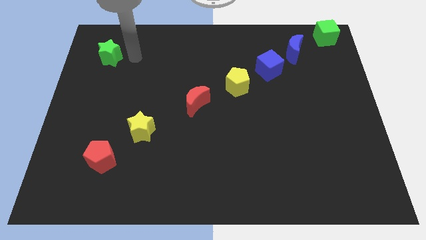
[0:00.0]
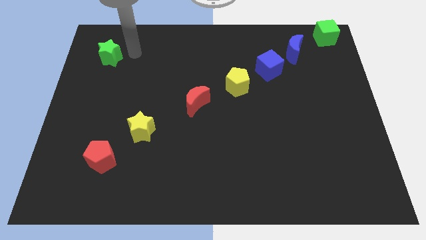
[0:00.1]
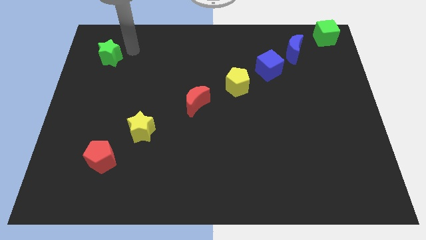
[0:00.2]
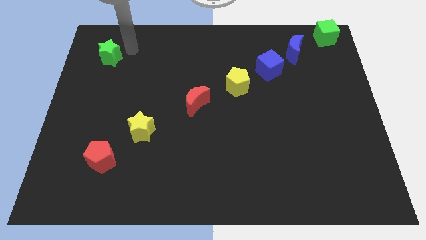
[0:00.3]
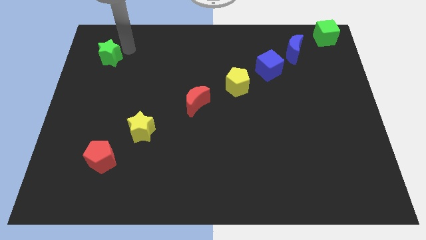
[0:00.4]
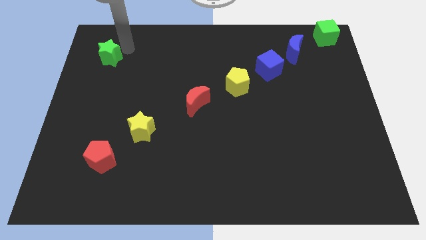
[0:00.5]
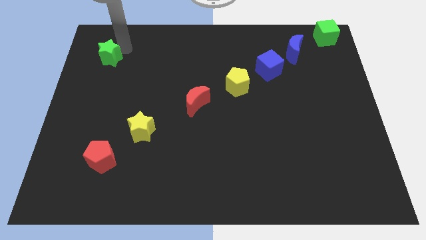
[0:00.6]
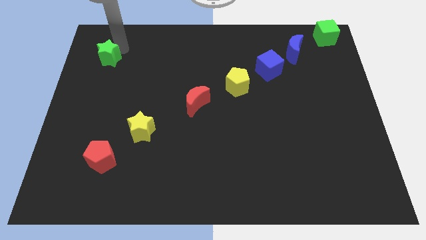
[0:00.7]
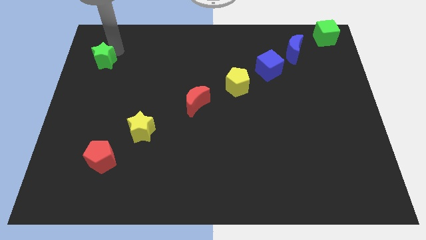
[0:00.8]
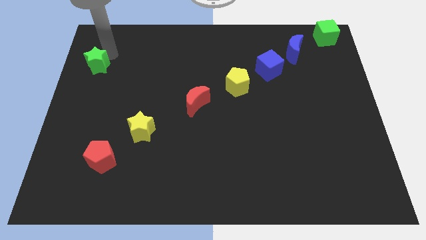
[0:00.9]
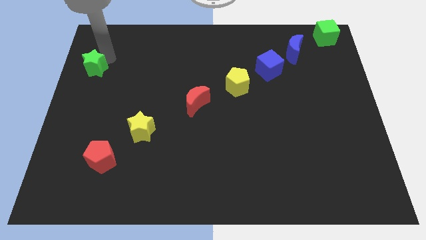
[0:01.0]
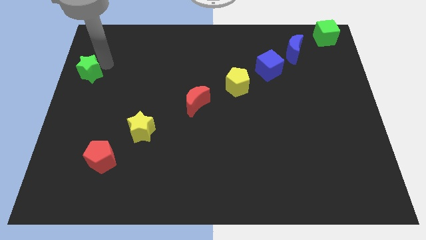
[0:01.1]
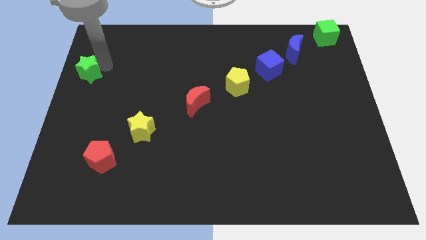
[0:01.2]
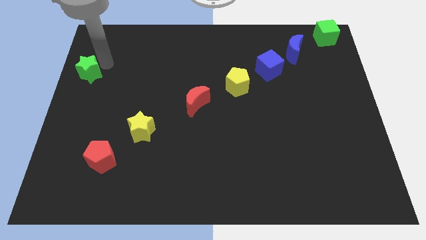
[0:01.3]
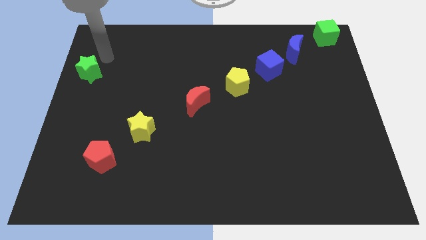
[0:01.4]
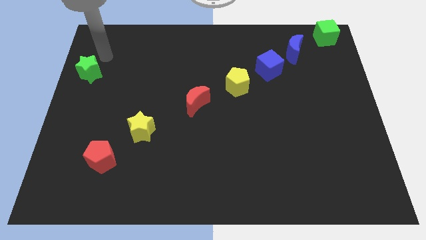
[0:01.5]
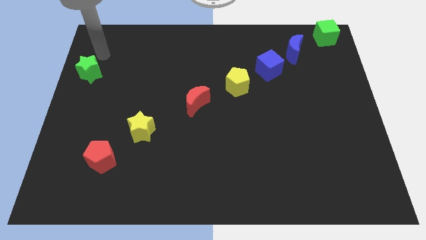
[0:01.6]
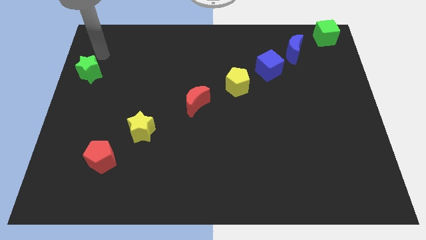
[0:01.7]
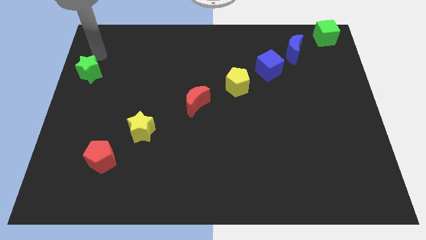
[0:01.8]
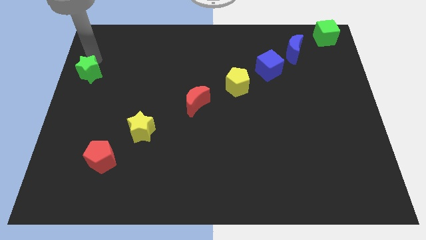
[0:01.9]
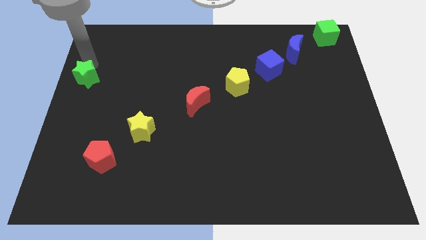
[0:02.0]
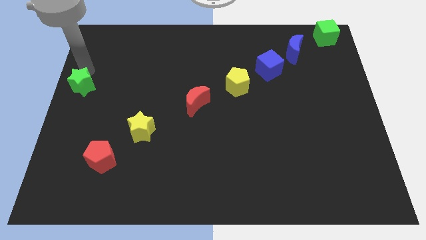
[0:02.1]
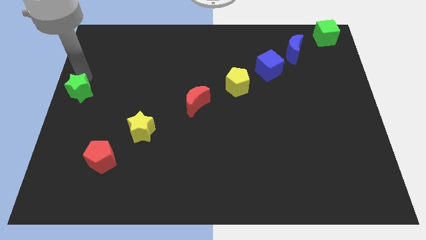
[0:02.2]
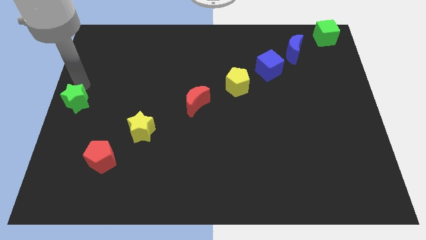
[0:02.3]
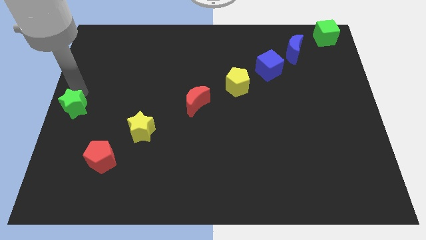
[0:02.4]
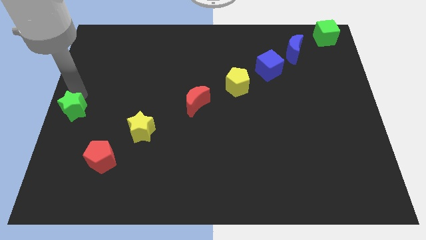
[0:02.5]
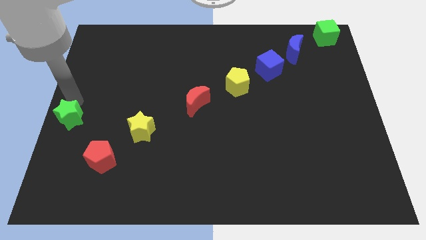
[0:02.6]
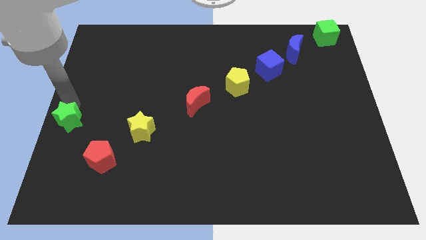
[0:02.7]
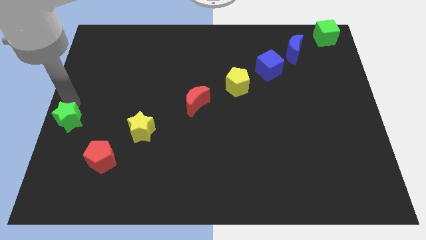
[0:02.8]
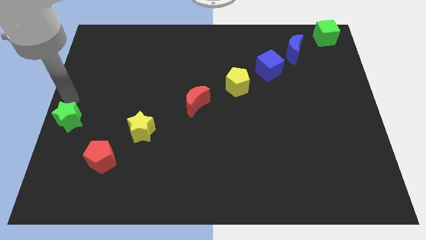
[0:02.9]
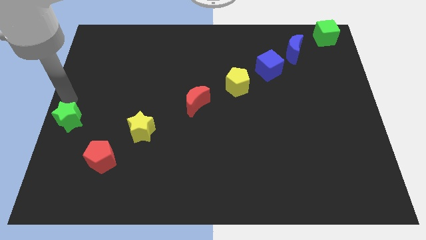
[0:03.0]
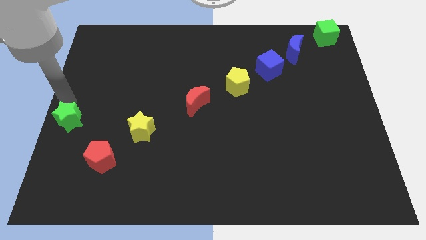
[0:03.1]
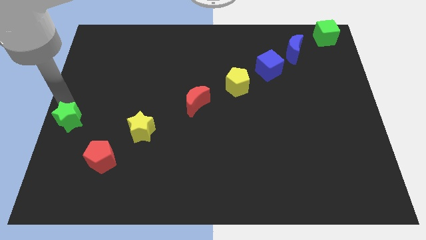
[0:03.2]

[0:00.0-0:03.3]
move the green star to the top left side of the red pentagon

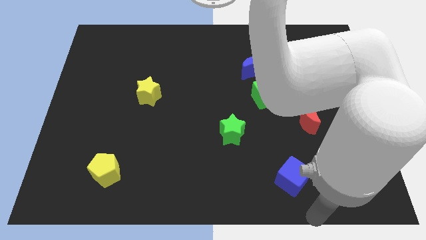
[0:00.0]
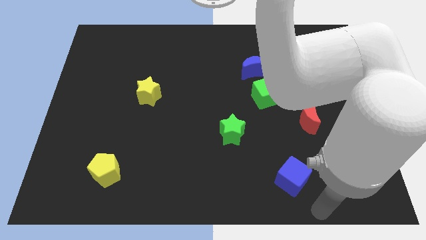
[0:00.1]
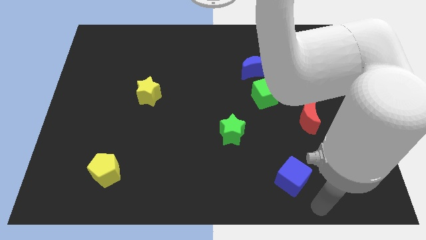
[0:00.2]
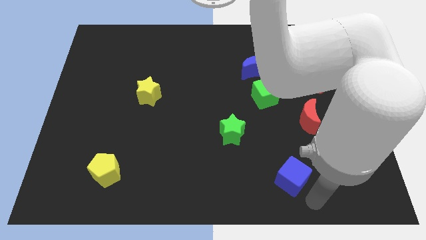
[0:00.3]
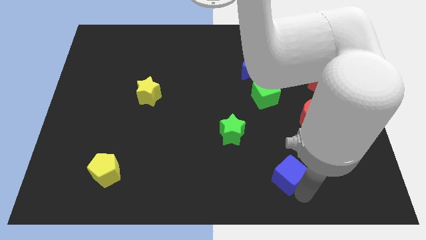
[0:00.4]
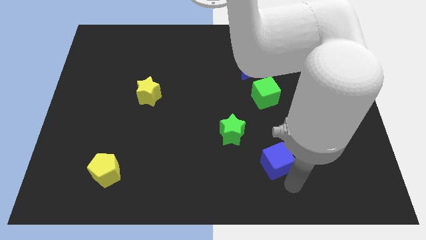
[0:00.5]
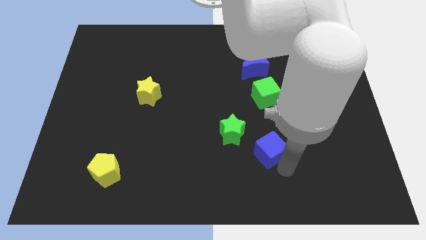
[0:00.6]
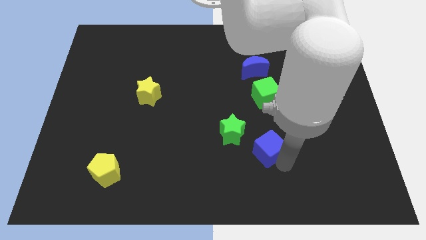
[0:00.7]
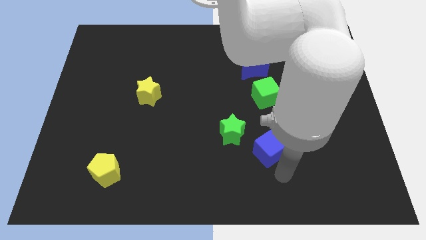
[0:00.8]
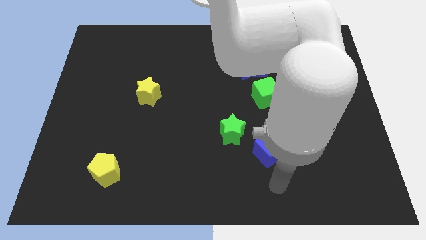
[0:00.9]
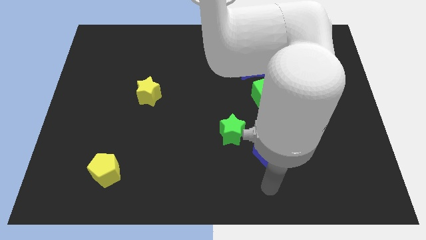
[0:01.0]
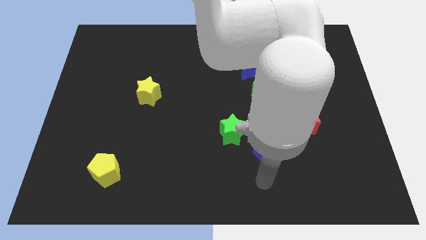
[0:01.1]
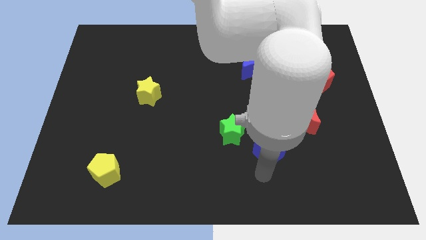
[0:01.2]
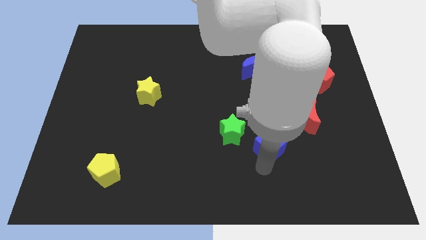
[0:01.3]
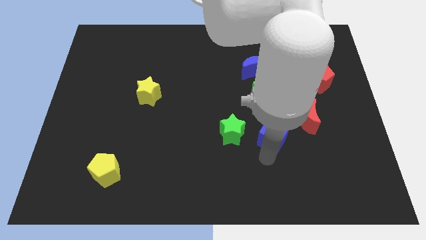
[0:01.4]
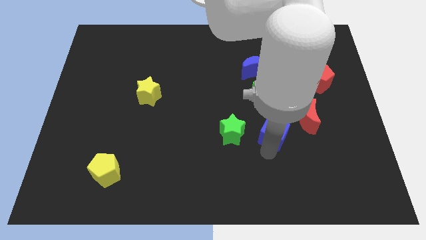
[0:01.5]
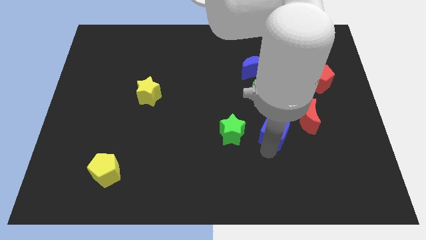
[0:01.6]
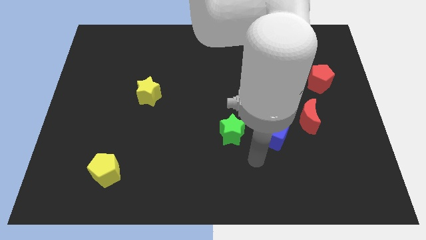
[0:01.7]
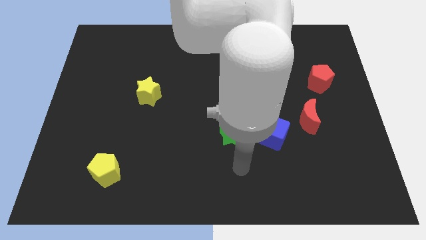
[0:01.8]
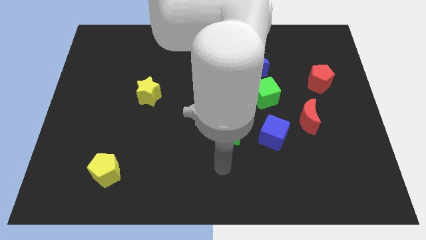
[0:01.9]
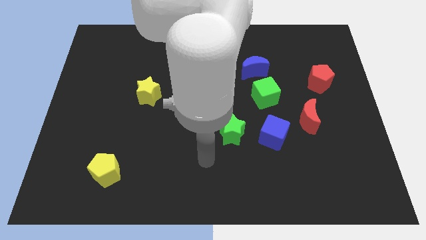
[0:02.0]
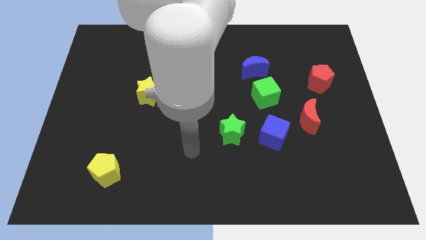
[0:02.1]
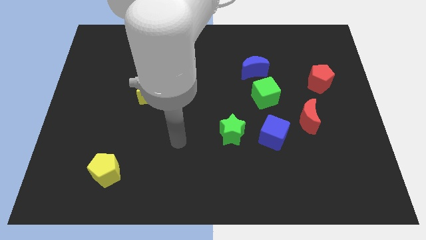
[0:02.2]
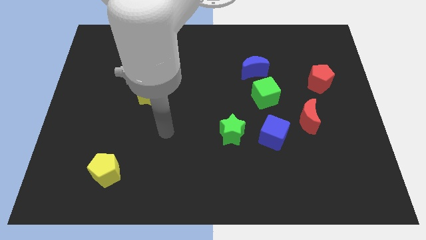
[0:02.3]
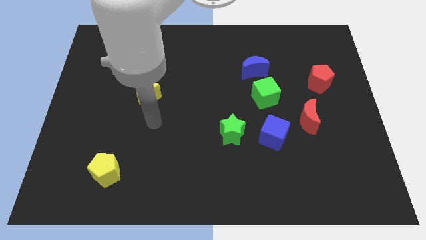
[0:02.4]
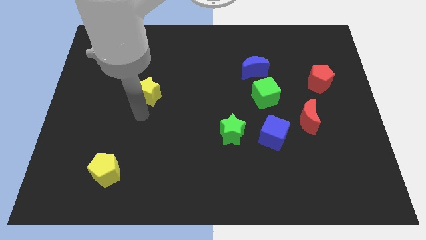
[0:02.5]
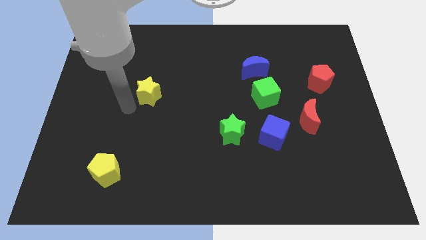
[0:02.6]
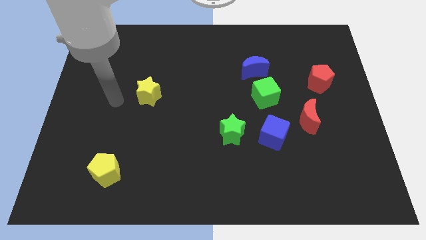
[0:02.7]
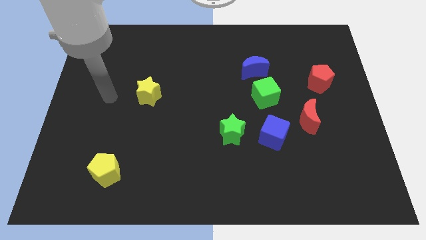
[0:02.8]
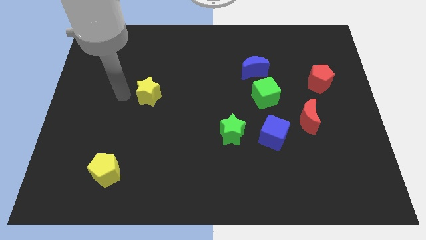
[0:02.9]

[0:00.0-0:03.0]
place your arm towards the left side of the yellow star

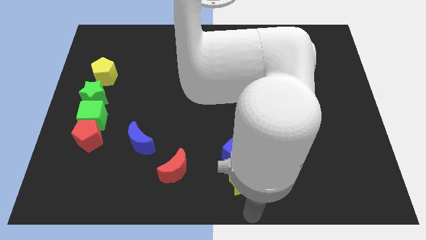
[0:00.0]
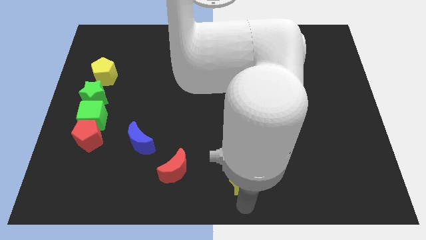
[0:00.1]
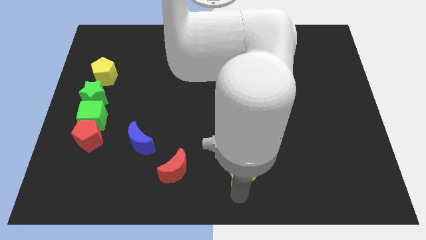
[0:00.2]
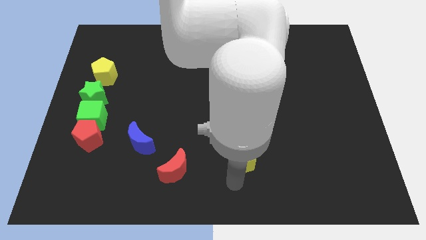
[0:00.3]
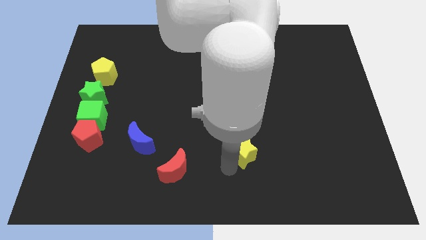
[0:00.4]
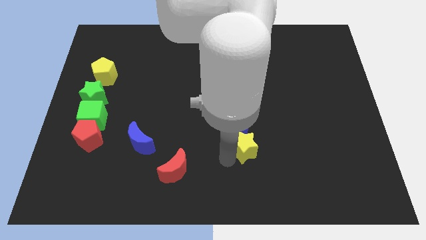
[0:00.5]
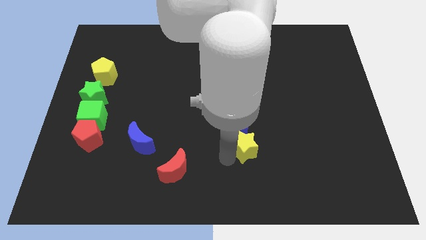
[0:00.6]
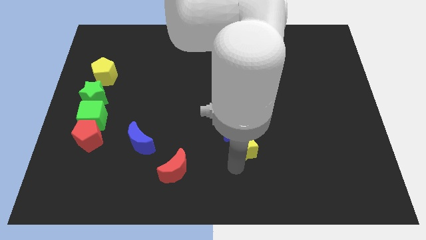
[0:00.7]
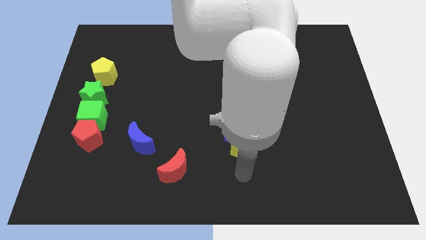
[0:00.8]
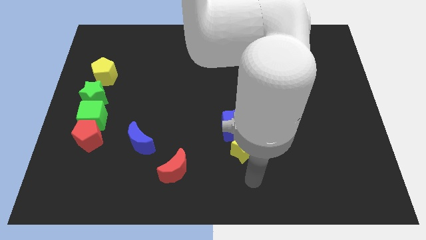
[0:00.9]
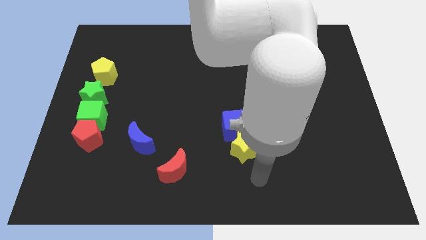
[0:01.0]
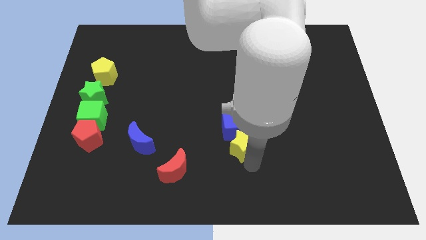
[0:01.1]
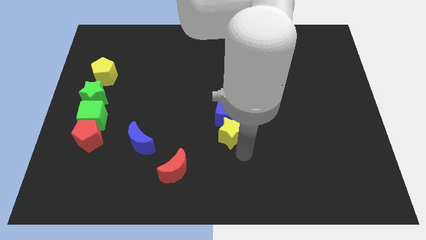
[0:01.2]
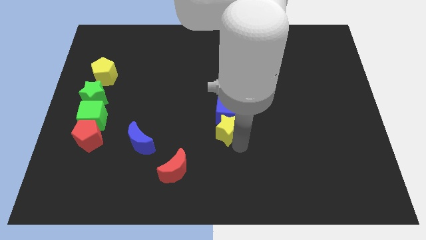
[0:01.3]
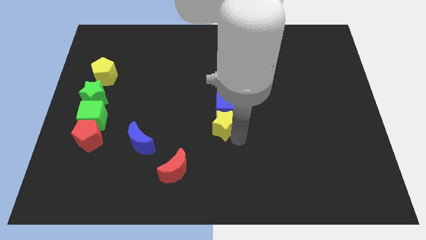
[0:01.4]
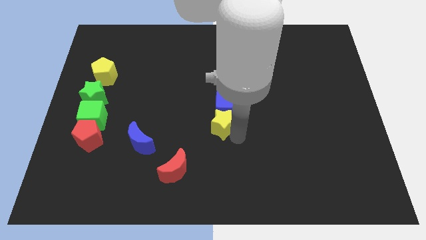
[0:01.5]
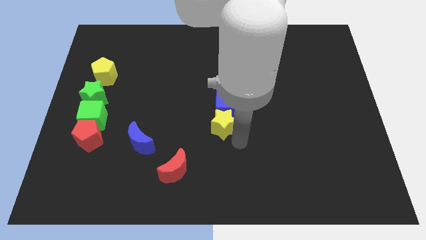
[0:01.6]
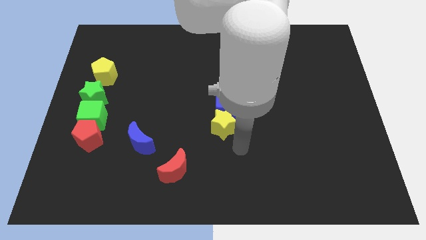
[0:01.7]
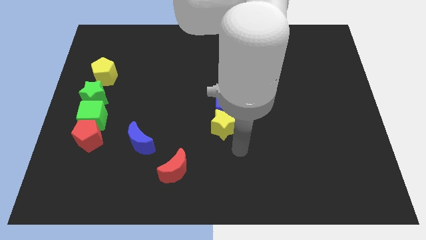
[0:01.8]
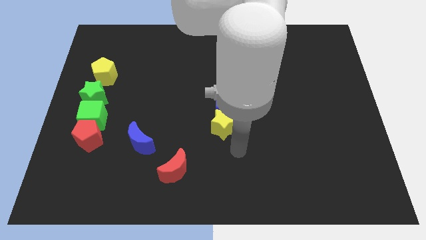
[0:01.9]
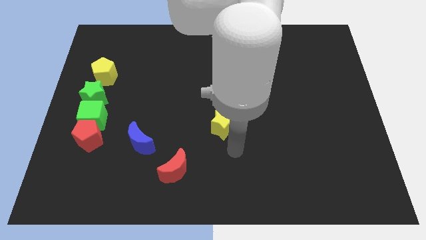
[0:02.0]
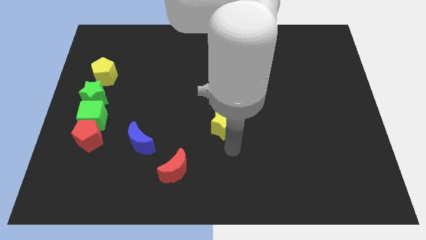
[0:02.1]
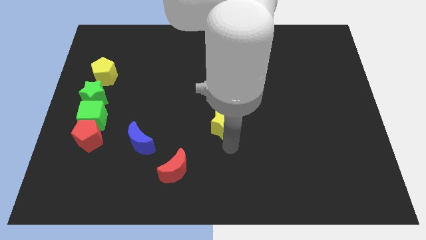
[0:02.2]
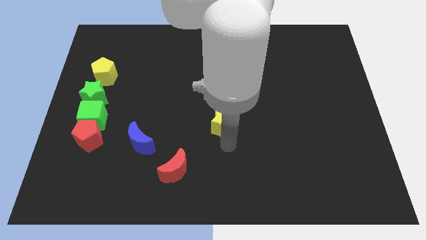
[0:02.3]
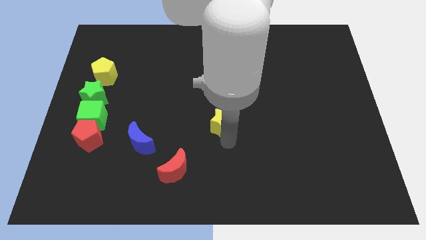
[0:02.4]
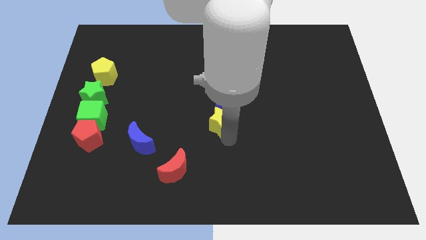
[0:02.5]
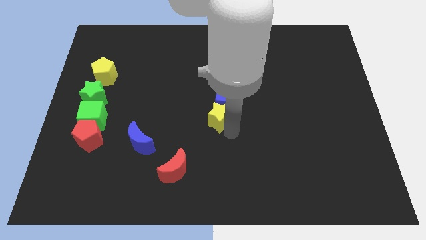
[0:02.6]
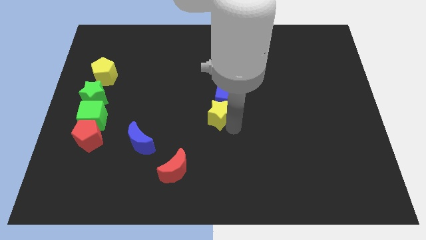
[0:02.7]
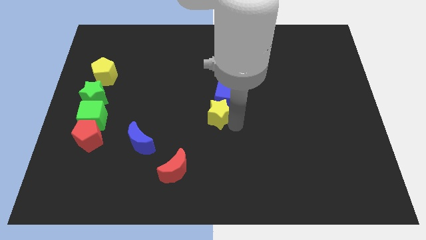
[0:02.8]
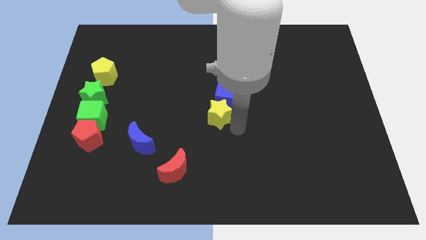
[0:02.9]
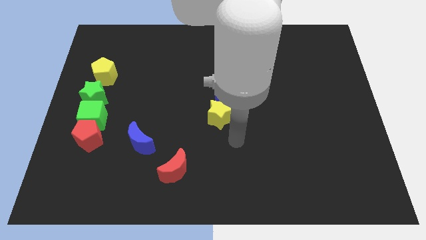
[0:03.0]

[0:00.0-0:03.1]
push the yellow star and blue cube to the center
